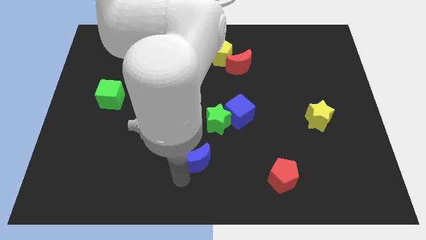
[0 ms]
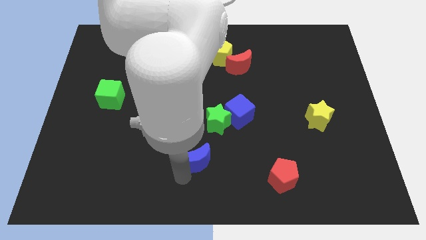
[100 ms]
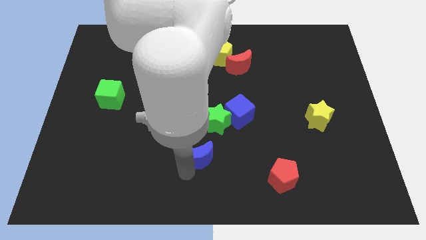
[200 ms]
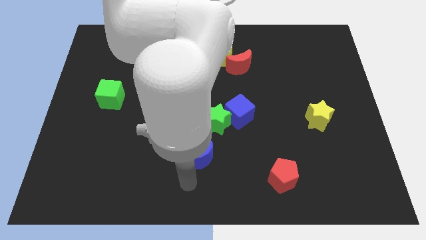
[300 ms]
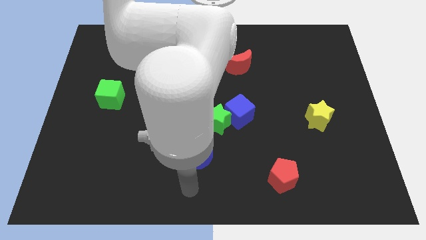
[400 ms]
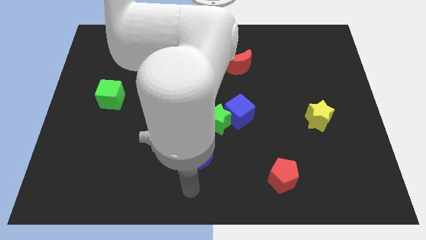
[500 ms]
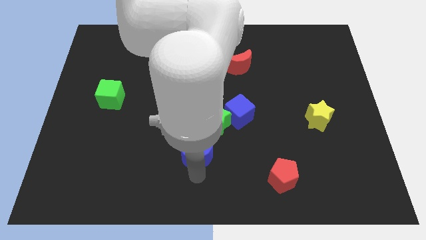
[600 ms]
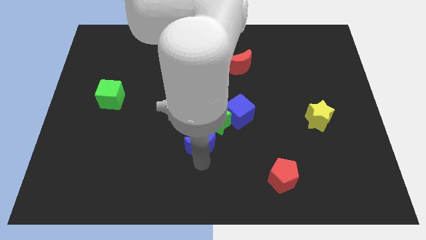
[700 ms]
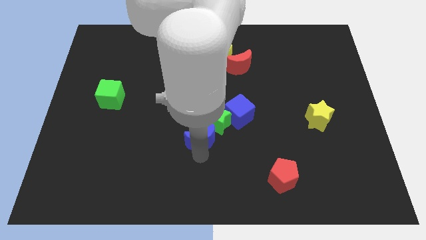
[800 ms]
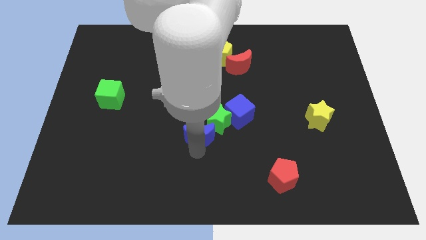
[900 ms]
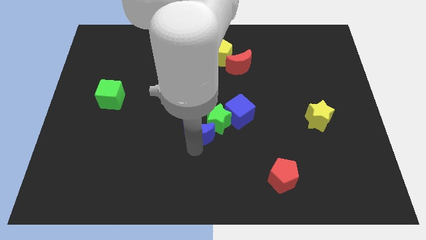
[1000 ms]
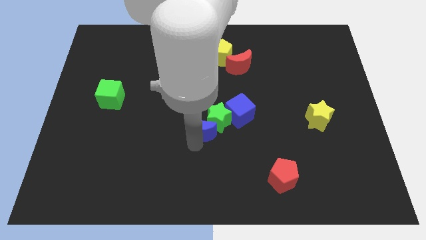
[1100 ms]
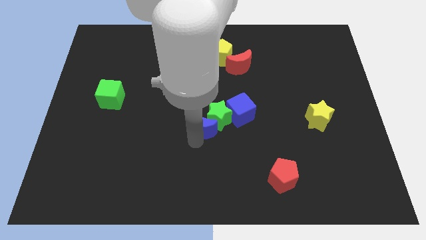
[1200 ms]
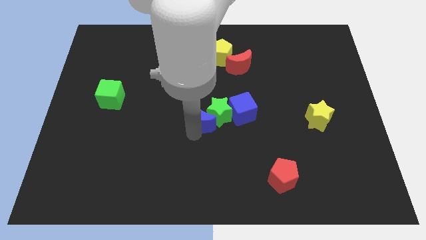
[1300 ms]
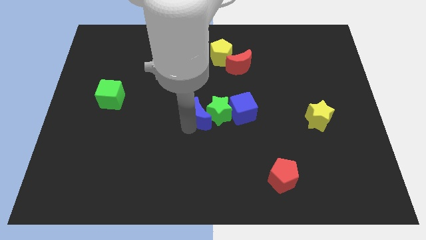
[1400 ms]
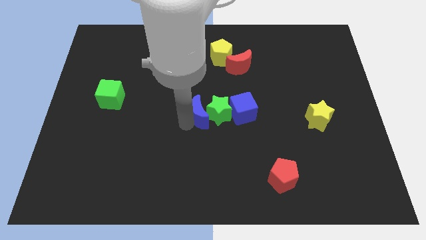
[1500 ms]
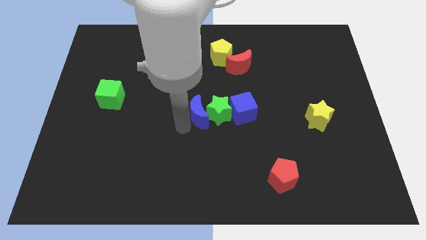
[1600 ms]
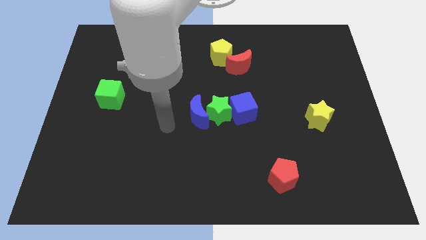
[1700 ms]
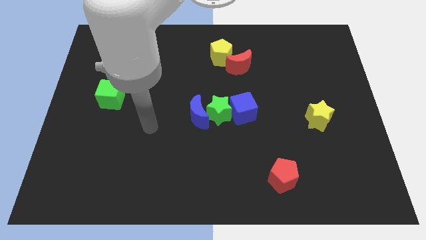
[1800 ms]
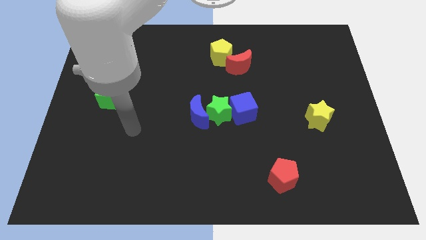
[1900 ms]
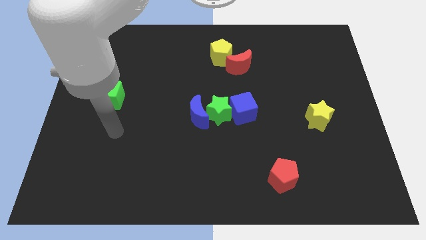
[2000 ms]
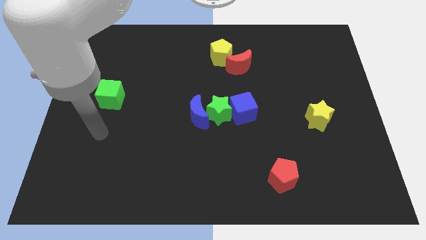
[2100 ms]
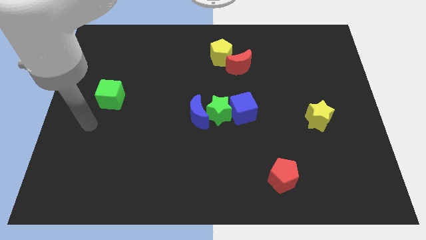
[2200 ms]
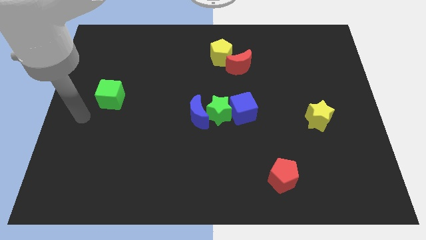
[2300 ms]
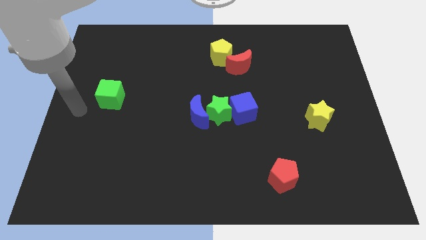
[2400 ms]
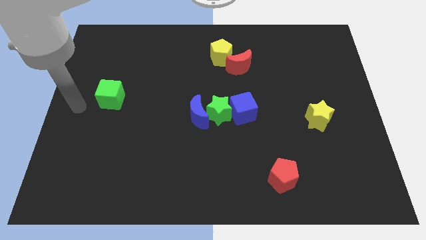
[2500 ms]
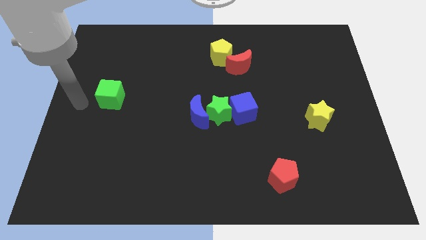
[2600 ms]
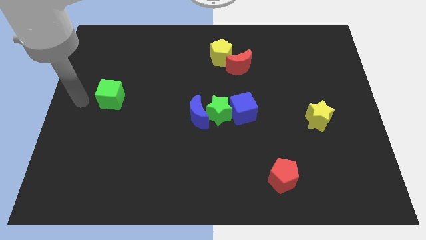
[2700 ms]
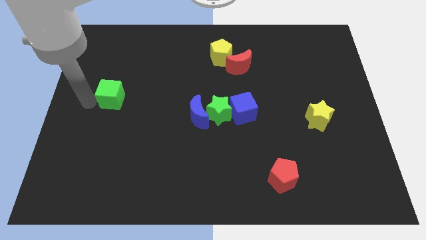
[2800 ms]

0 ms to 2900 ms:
place the blue blocks and green star at the center of the board

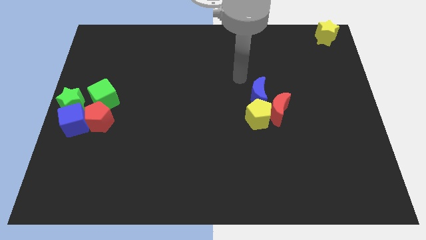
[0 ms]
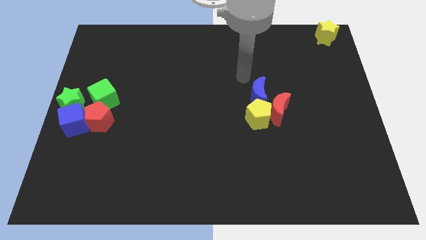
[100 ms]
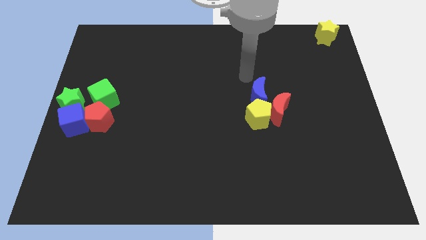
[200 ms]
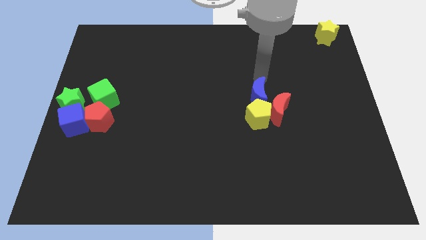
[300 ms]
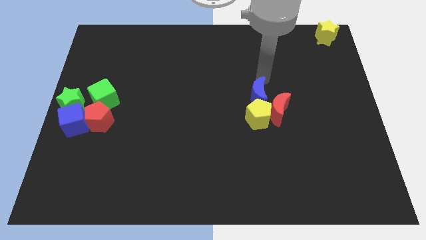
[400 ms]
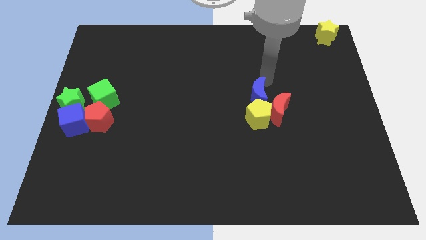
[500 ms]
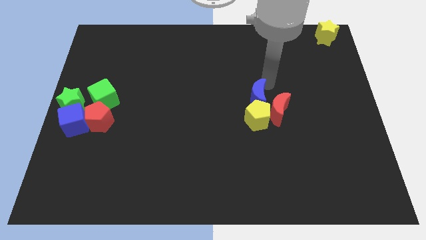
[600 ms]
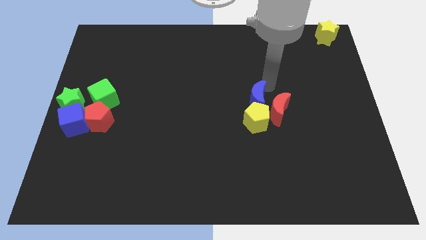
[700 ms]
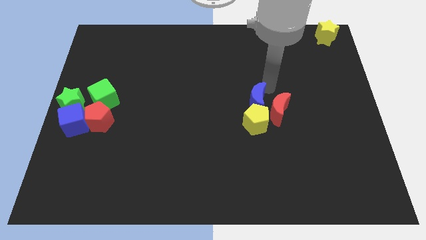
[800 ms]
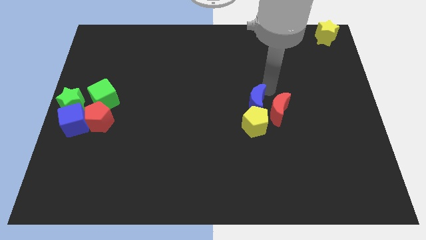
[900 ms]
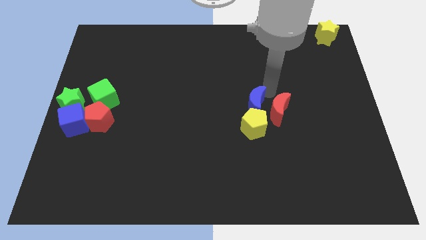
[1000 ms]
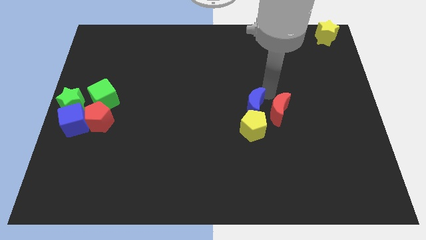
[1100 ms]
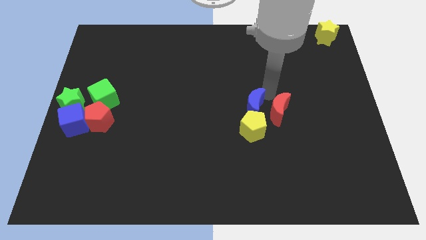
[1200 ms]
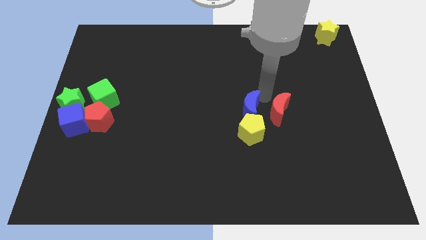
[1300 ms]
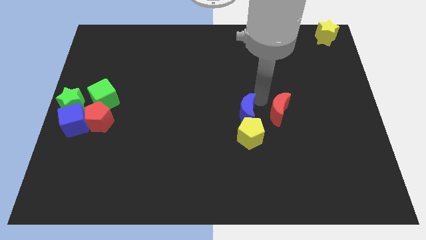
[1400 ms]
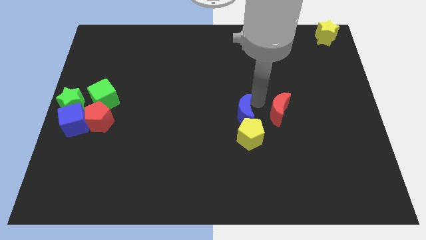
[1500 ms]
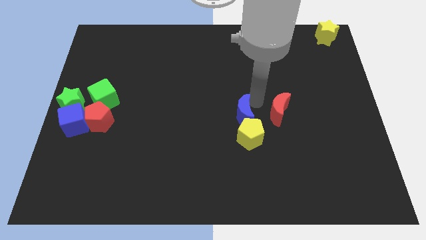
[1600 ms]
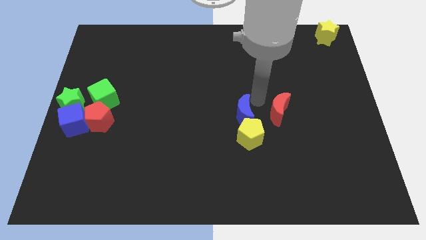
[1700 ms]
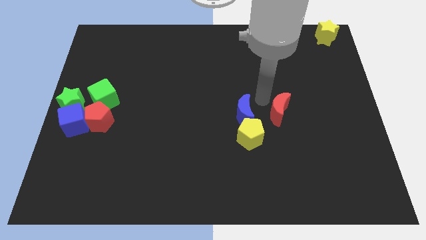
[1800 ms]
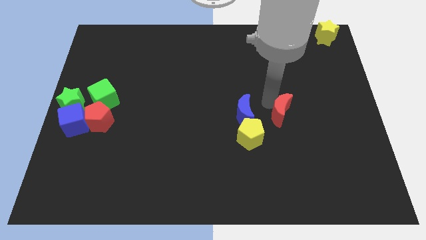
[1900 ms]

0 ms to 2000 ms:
move the yellow pentagon and blue crescent away from the left side of the red moon

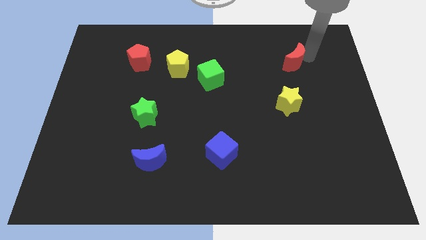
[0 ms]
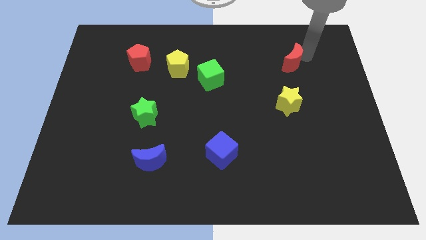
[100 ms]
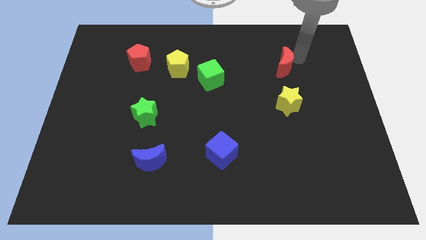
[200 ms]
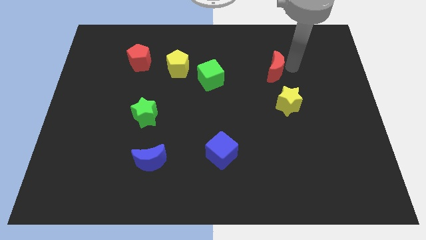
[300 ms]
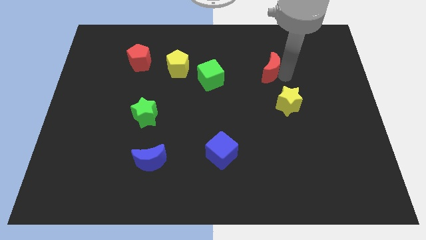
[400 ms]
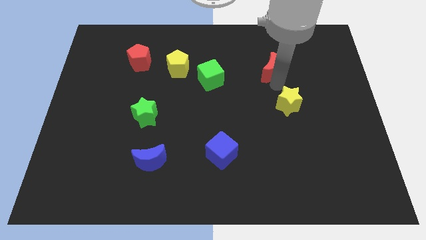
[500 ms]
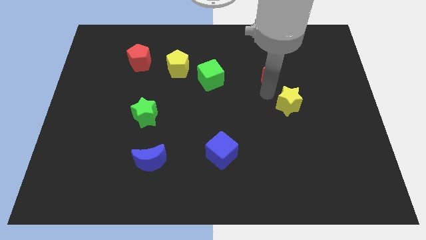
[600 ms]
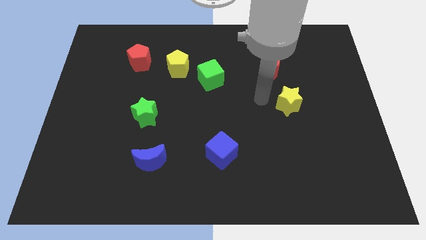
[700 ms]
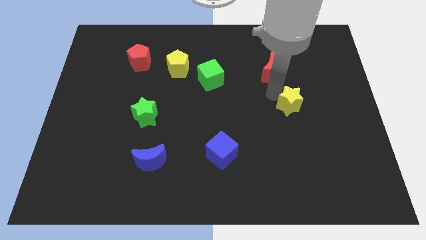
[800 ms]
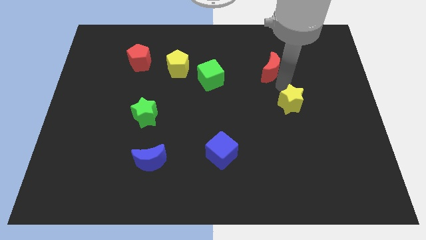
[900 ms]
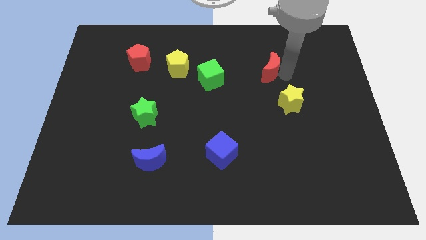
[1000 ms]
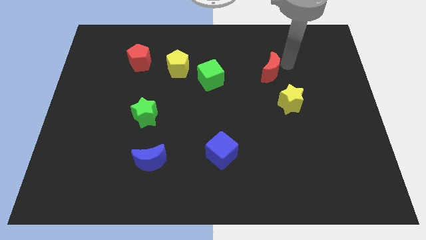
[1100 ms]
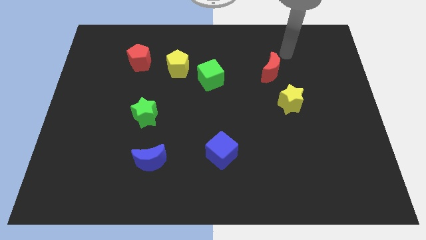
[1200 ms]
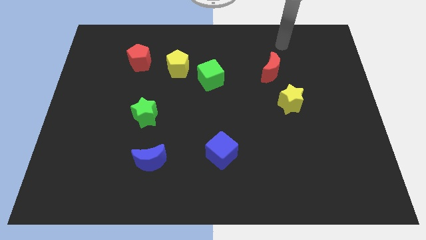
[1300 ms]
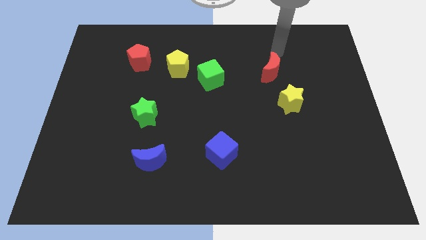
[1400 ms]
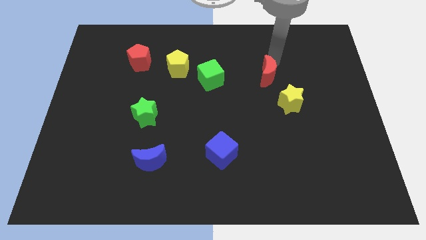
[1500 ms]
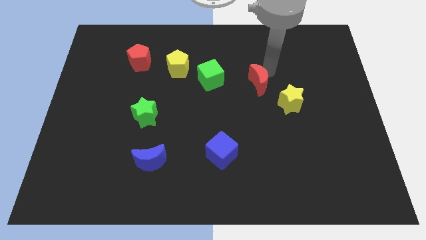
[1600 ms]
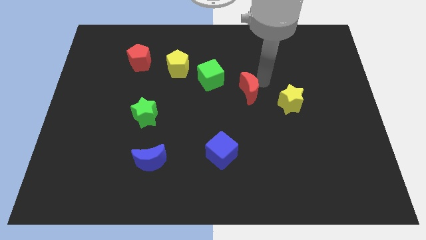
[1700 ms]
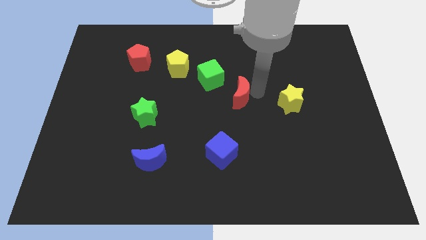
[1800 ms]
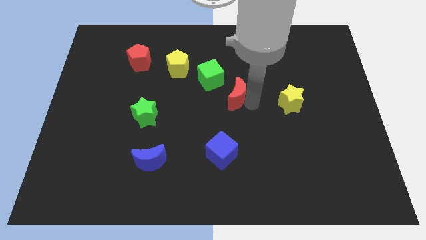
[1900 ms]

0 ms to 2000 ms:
drag the red crescent towards the bottom

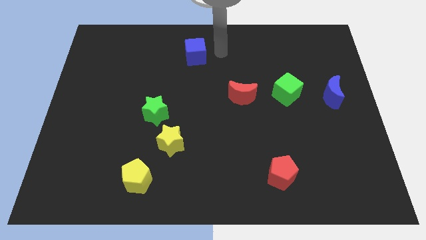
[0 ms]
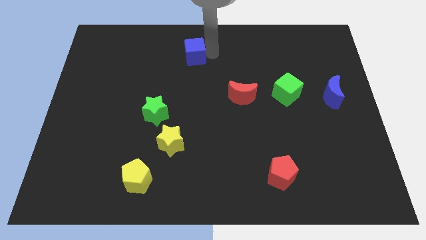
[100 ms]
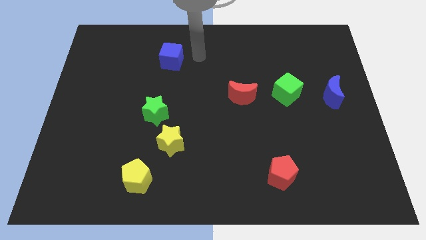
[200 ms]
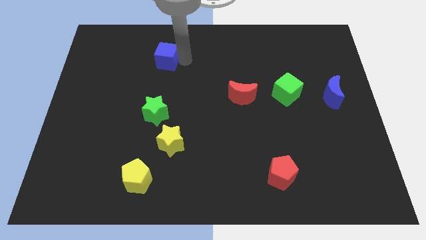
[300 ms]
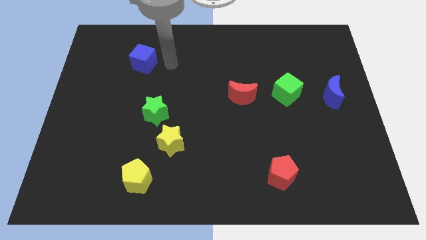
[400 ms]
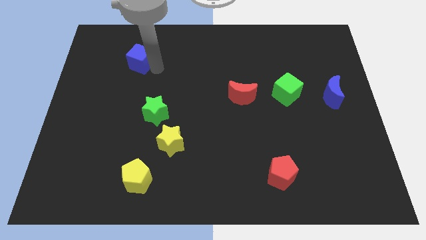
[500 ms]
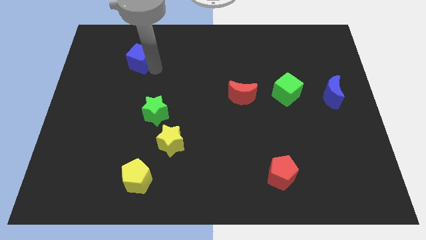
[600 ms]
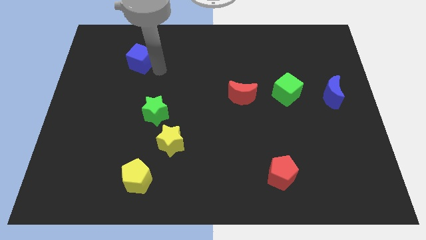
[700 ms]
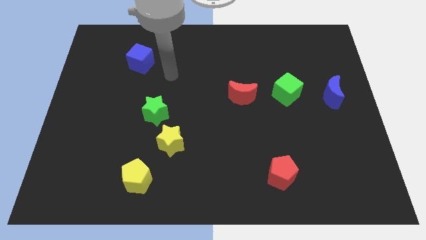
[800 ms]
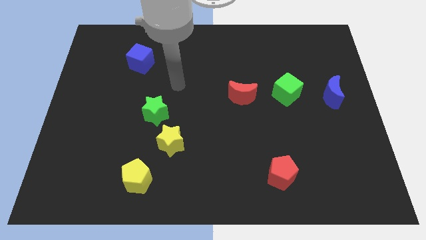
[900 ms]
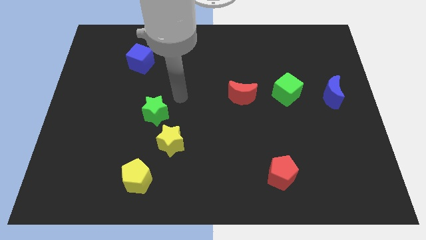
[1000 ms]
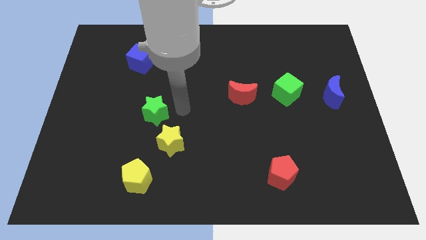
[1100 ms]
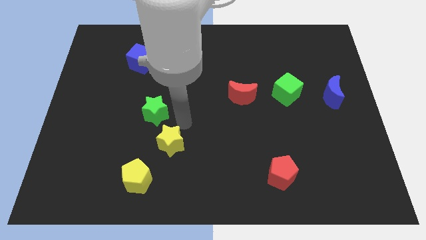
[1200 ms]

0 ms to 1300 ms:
push the blue cube towards the left side

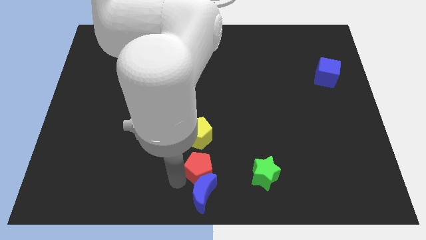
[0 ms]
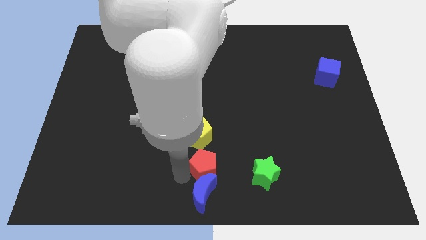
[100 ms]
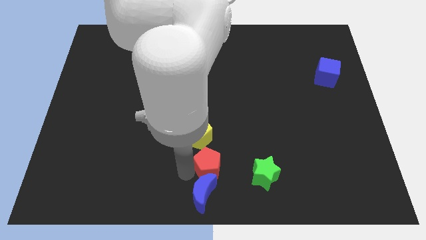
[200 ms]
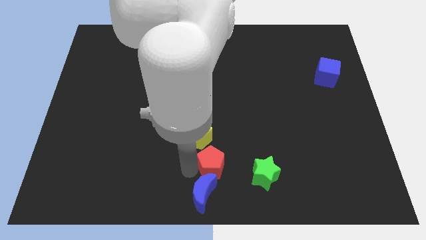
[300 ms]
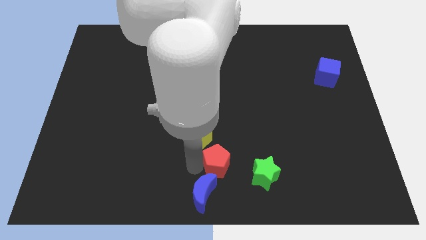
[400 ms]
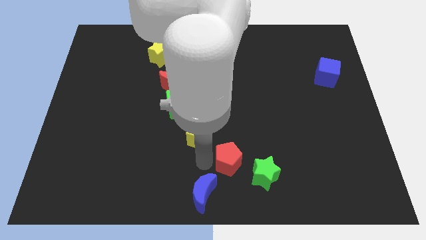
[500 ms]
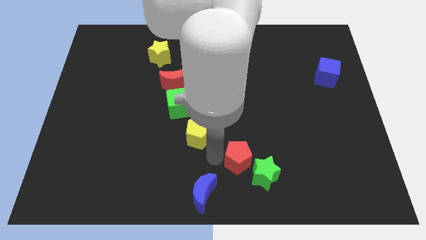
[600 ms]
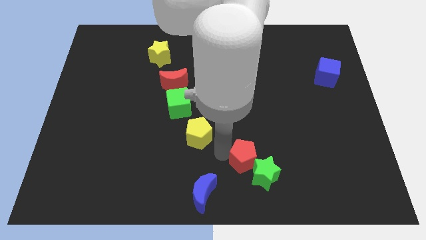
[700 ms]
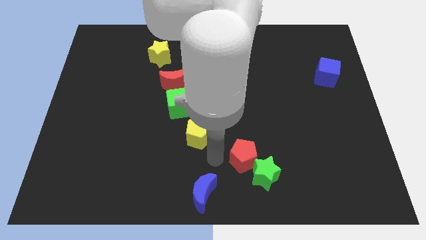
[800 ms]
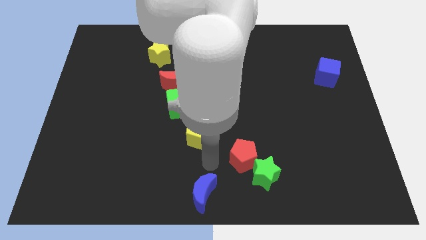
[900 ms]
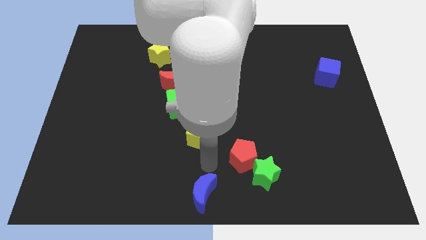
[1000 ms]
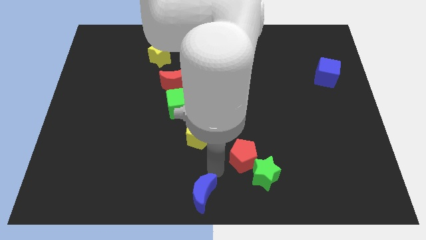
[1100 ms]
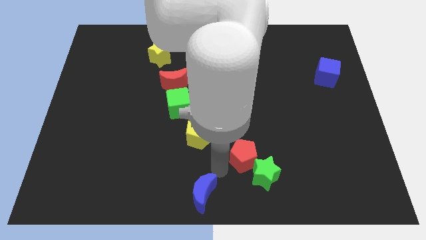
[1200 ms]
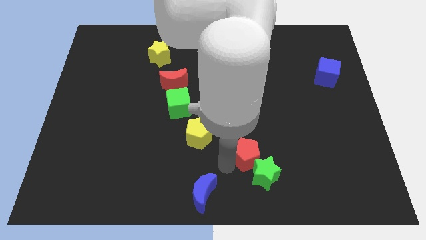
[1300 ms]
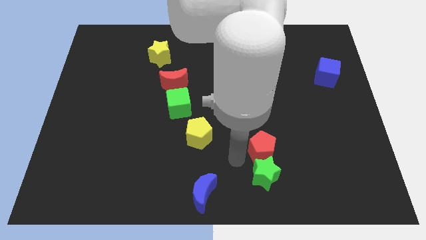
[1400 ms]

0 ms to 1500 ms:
place the red pentagon at the top side of the green star
